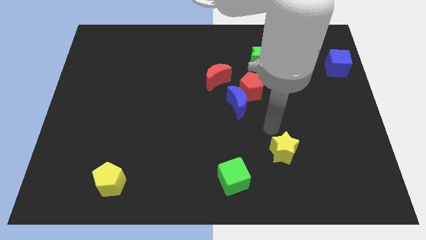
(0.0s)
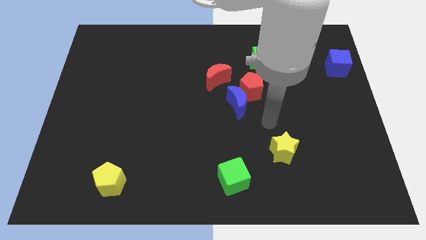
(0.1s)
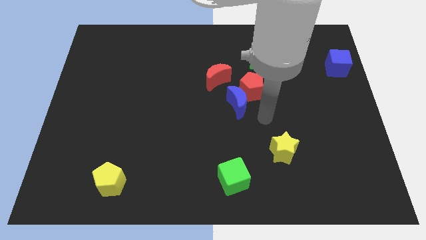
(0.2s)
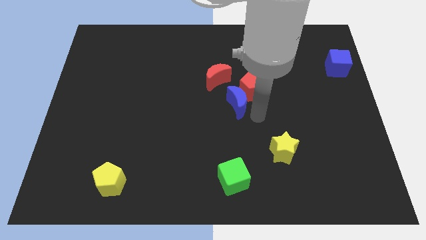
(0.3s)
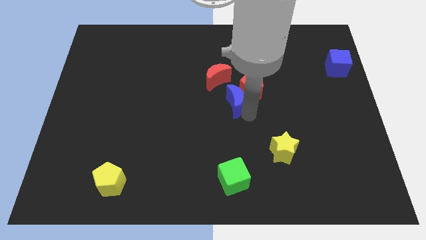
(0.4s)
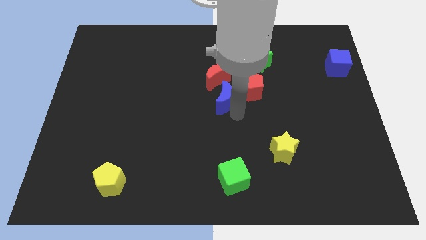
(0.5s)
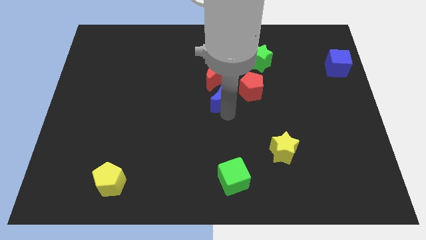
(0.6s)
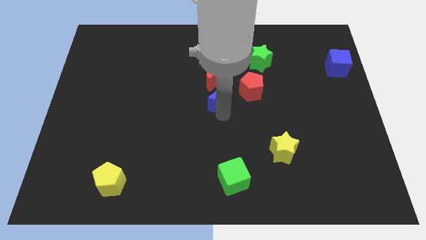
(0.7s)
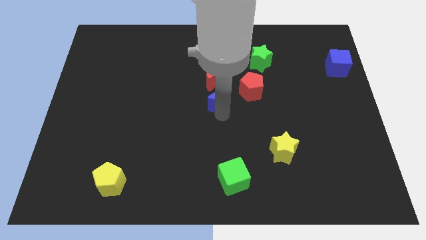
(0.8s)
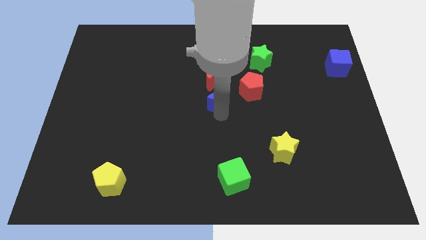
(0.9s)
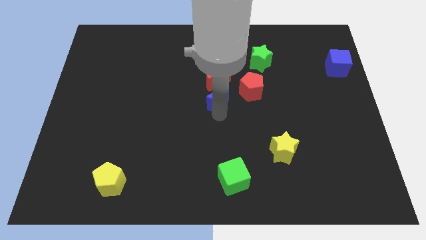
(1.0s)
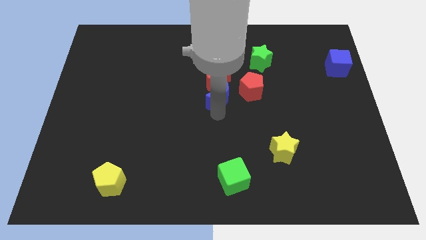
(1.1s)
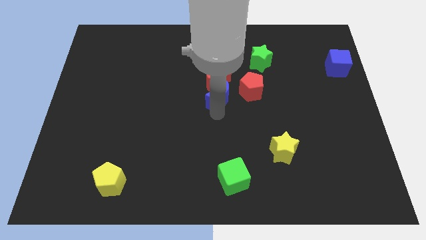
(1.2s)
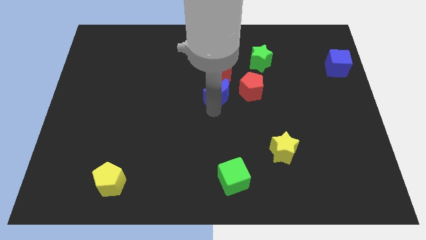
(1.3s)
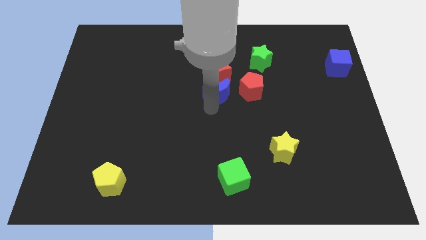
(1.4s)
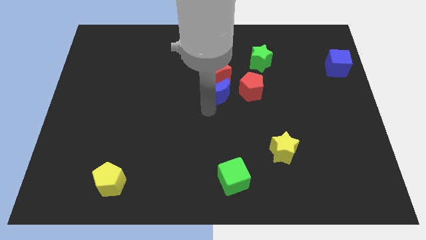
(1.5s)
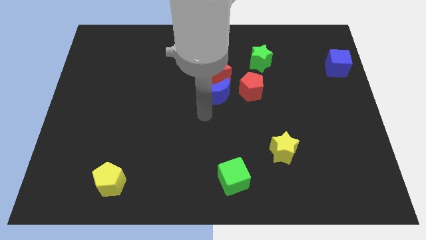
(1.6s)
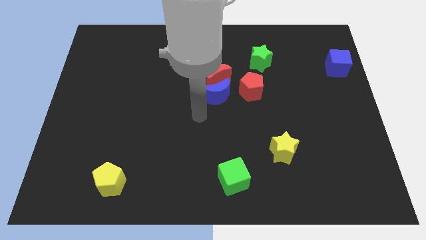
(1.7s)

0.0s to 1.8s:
place the blue crescent below the red crescent

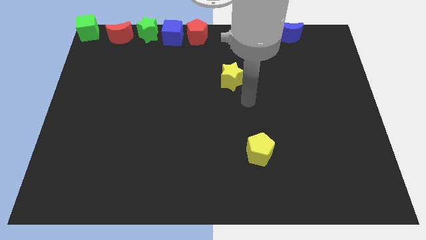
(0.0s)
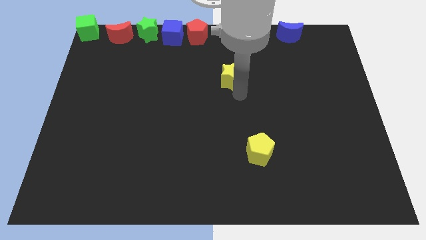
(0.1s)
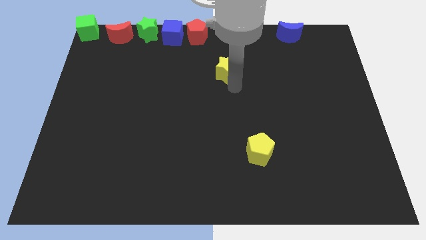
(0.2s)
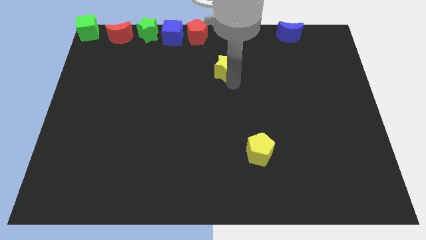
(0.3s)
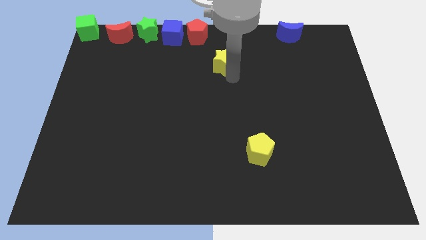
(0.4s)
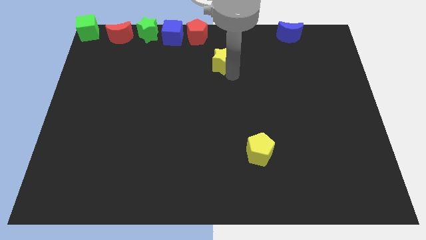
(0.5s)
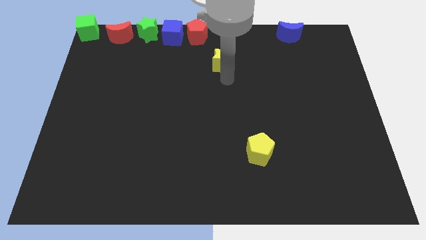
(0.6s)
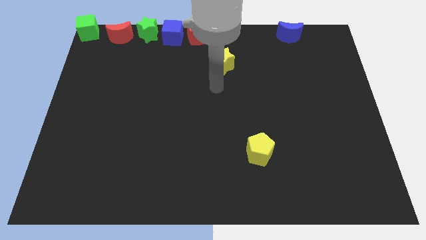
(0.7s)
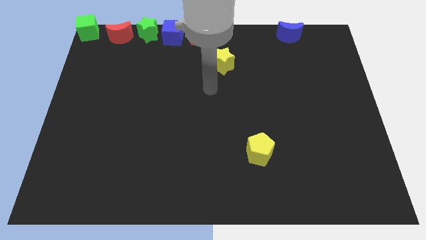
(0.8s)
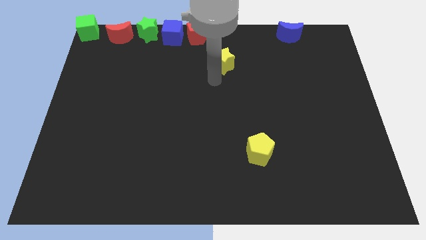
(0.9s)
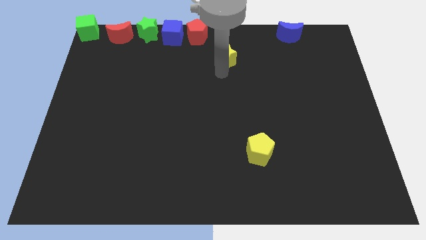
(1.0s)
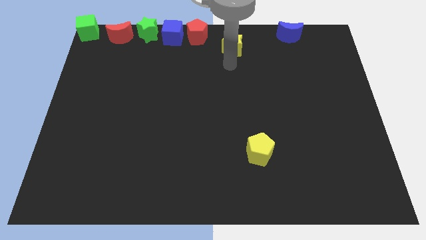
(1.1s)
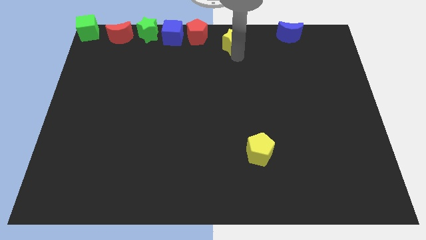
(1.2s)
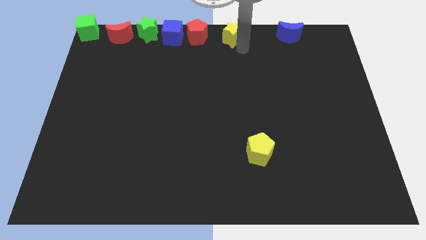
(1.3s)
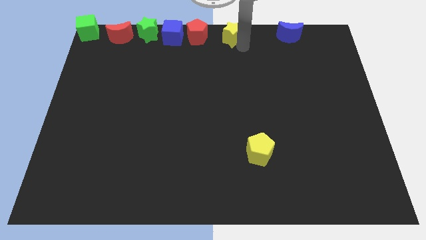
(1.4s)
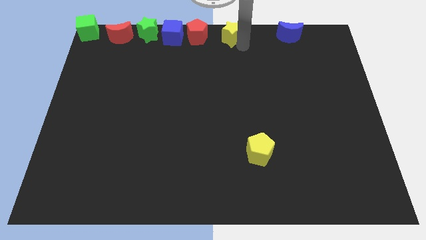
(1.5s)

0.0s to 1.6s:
place the yellow star between the red pentagon and blue moon

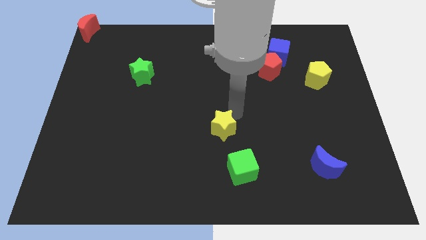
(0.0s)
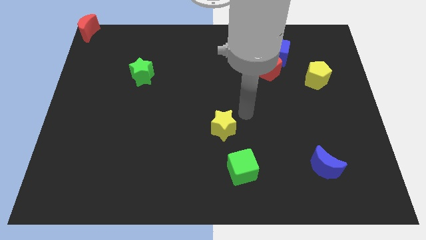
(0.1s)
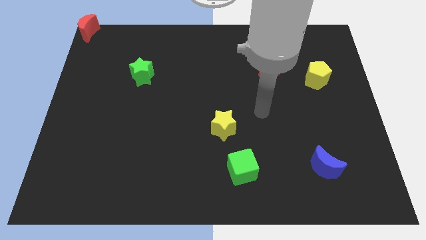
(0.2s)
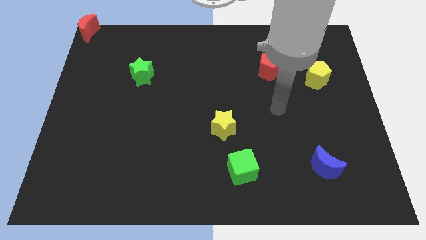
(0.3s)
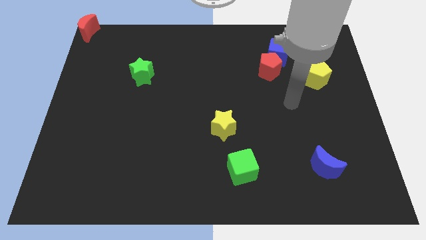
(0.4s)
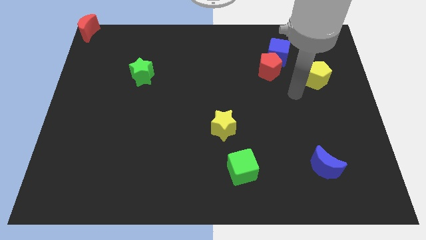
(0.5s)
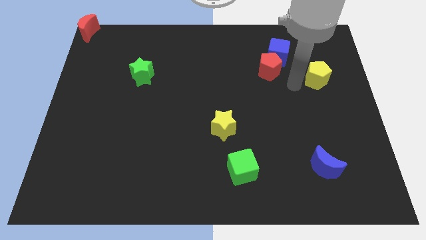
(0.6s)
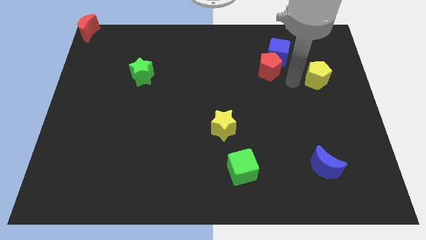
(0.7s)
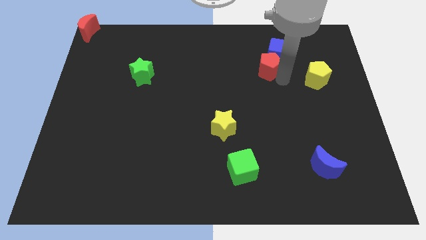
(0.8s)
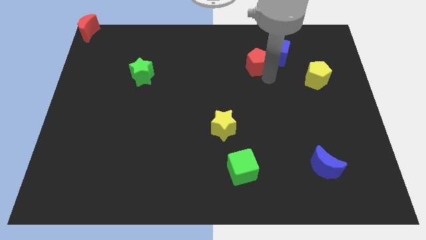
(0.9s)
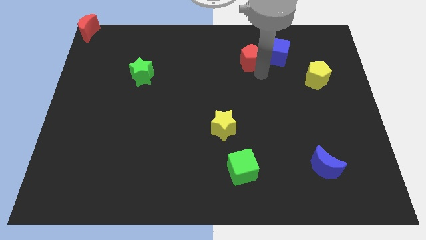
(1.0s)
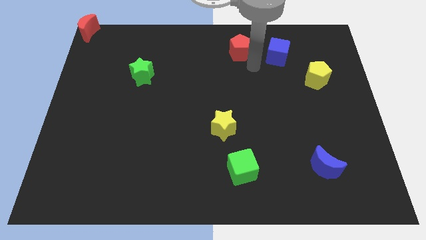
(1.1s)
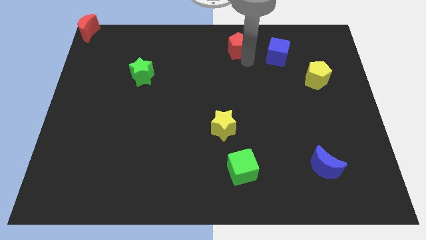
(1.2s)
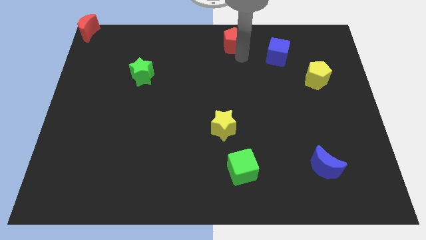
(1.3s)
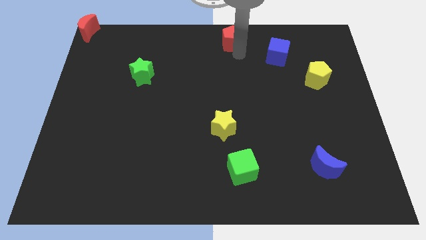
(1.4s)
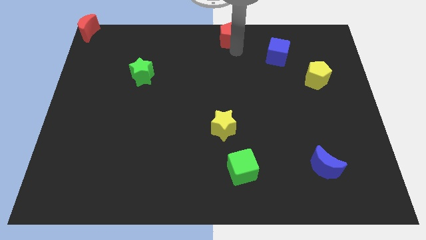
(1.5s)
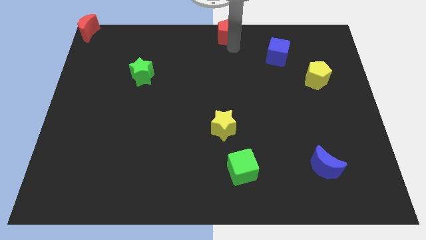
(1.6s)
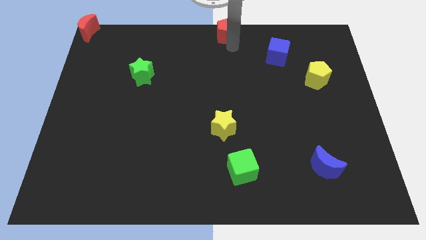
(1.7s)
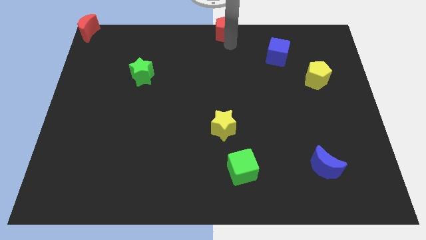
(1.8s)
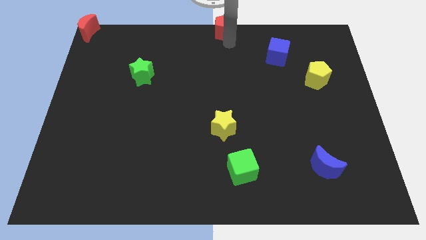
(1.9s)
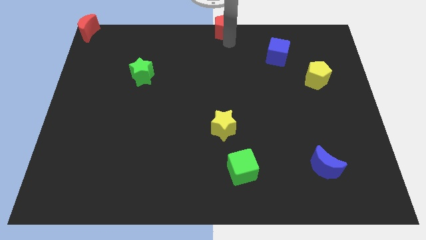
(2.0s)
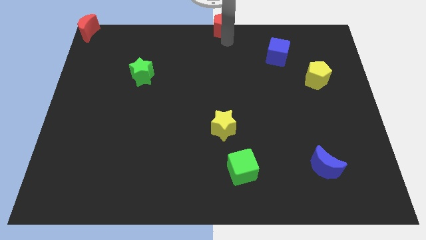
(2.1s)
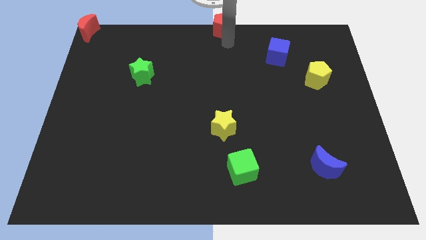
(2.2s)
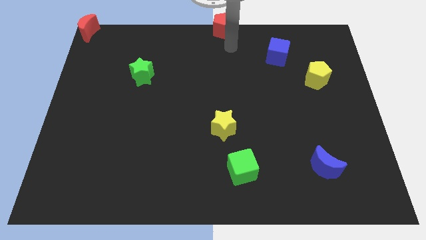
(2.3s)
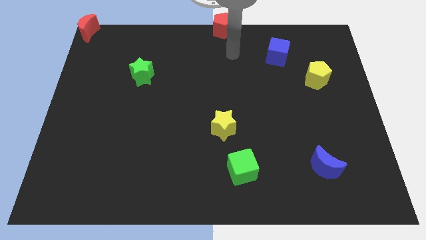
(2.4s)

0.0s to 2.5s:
push the red pentagon towards the top center

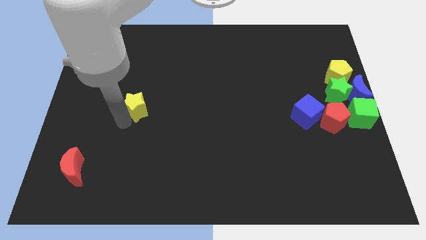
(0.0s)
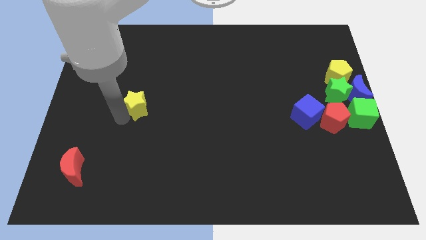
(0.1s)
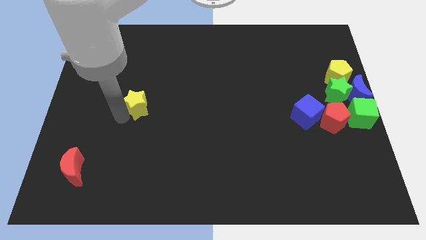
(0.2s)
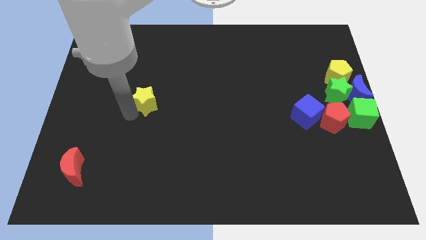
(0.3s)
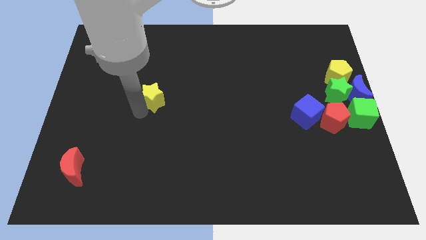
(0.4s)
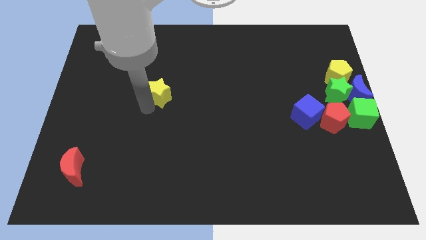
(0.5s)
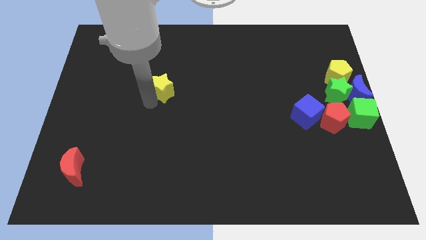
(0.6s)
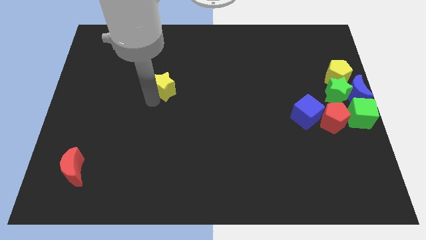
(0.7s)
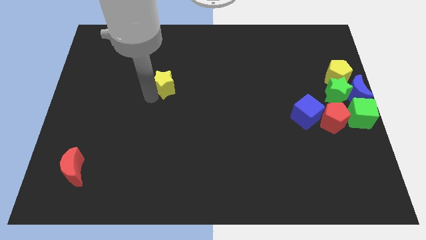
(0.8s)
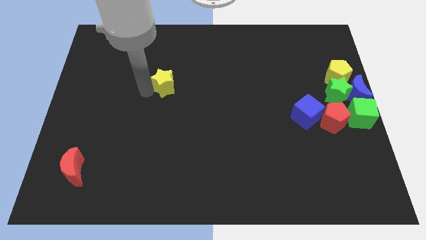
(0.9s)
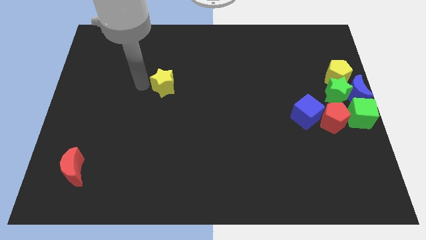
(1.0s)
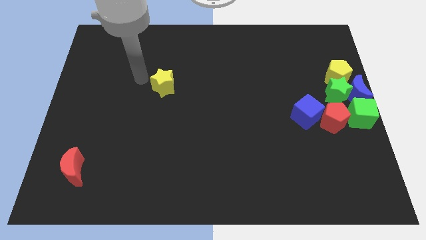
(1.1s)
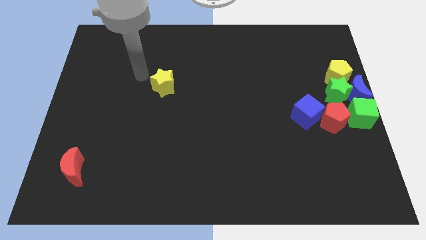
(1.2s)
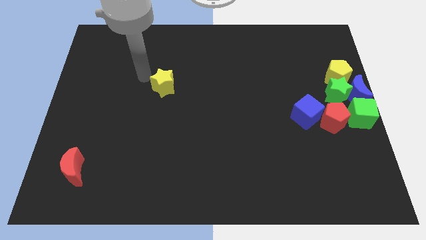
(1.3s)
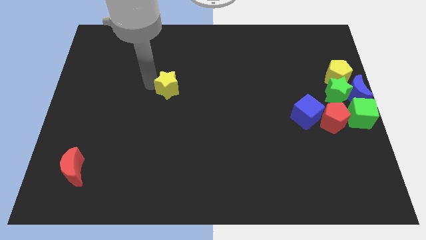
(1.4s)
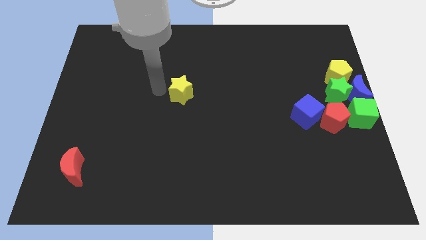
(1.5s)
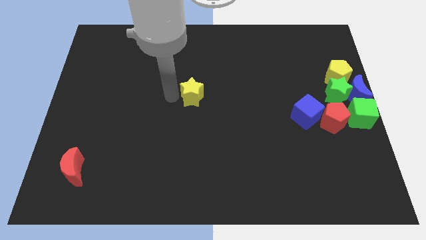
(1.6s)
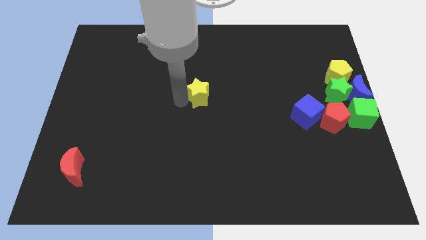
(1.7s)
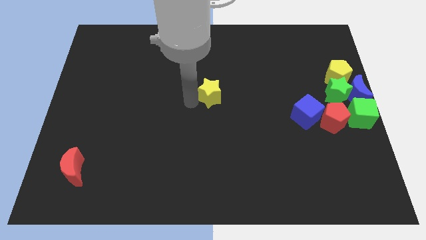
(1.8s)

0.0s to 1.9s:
place the yellow star to the center of the board

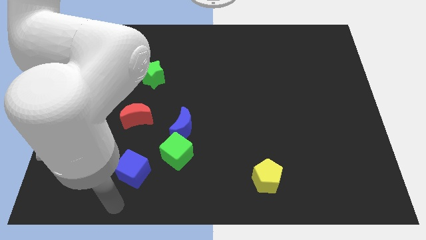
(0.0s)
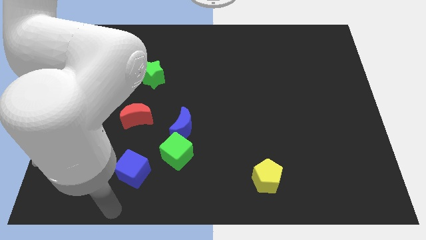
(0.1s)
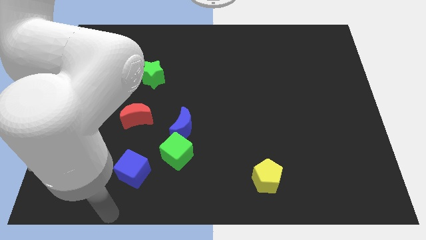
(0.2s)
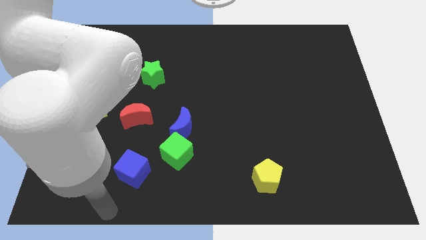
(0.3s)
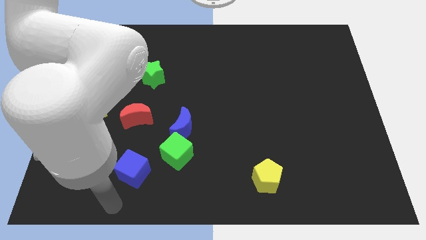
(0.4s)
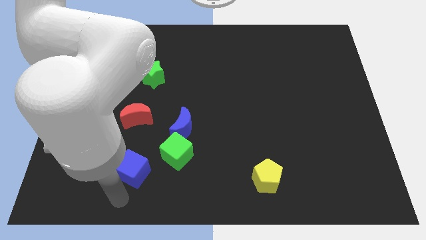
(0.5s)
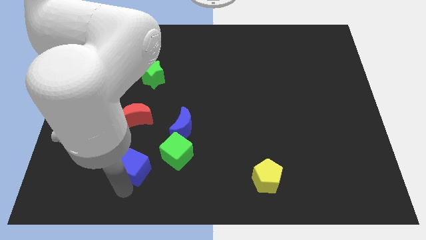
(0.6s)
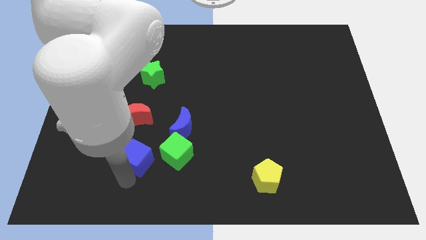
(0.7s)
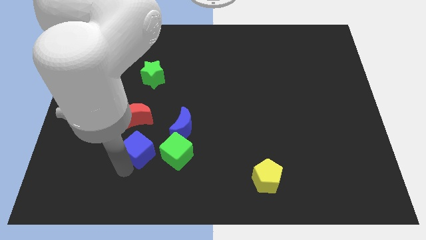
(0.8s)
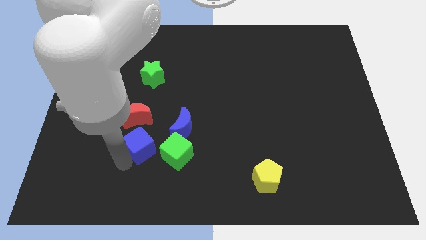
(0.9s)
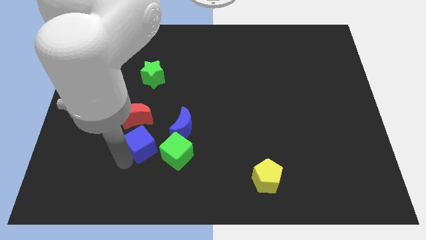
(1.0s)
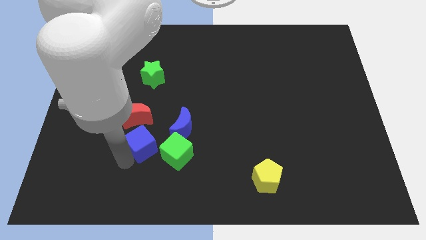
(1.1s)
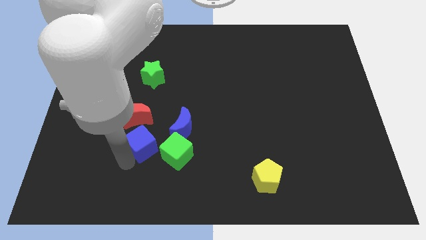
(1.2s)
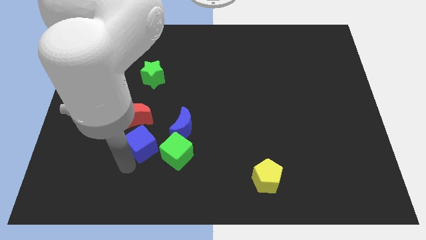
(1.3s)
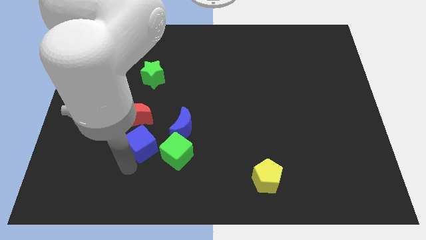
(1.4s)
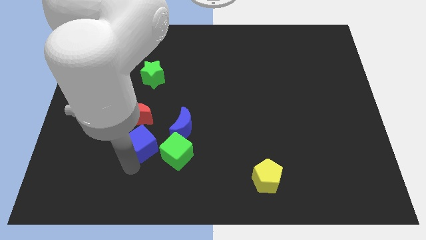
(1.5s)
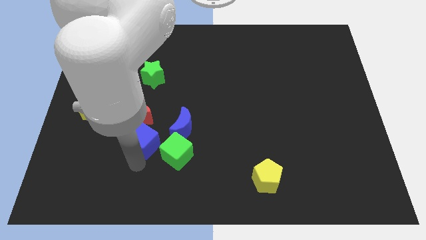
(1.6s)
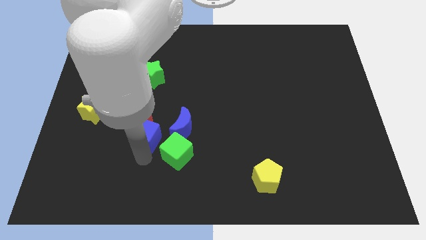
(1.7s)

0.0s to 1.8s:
place the blue cube below the red crescent
